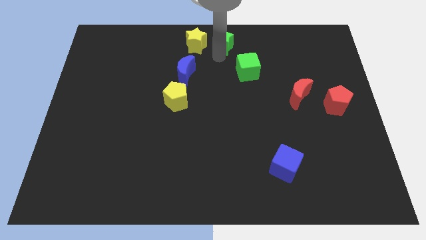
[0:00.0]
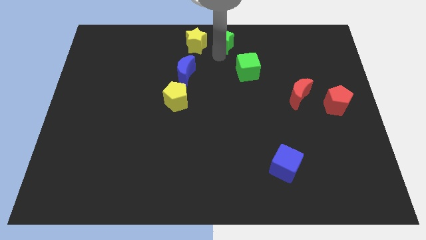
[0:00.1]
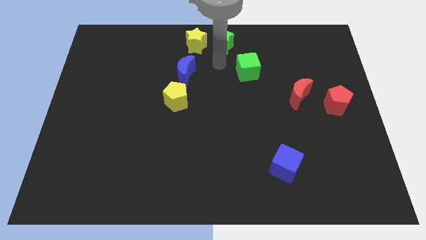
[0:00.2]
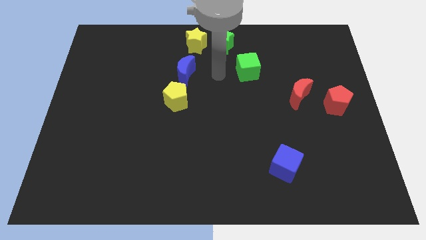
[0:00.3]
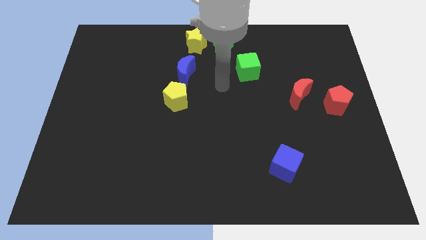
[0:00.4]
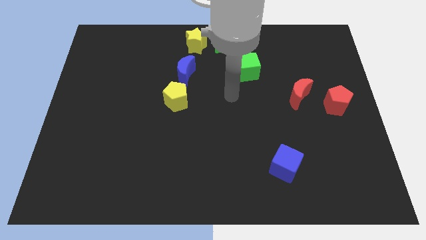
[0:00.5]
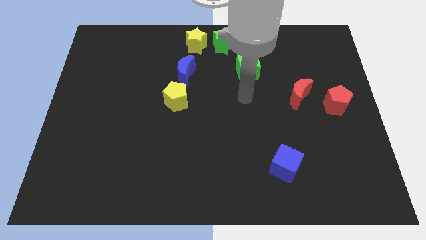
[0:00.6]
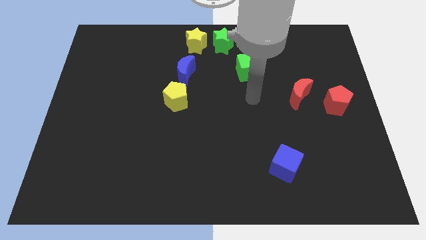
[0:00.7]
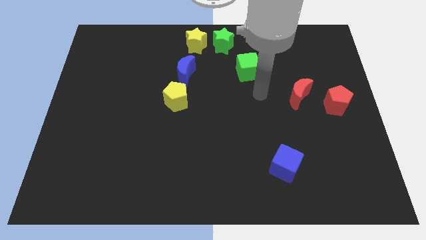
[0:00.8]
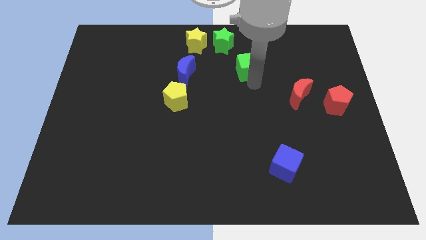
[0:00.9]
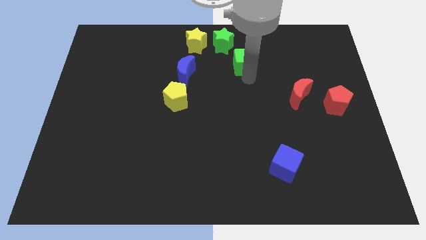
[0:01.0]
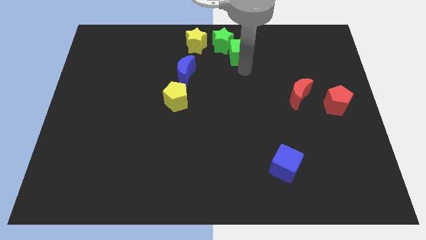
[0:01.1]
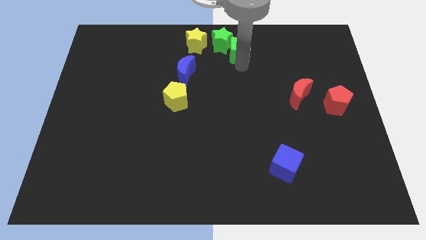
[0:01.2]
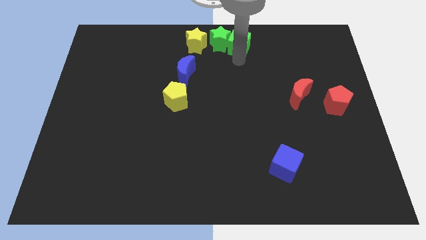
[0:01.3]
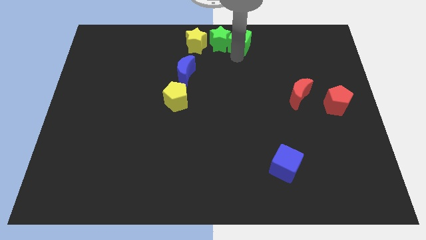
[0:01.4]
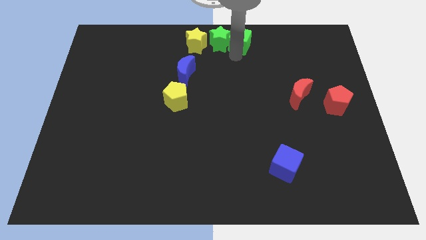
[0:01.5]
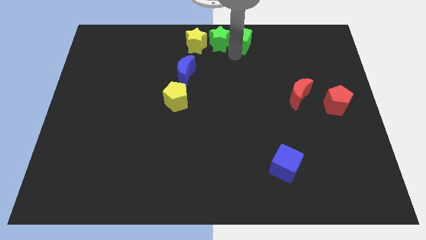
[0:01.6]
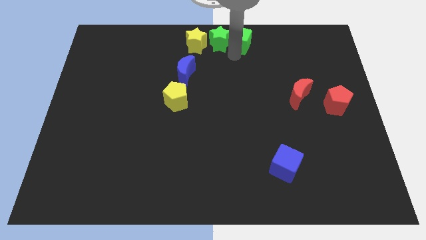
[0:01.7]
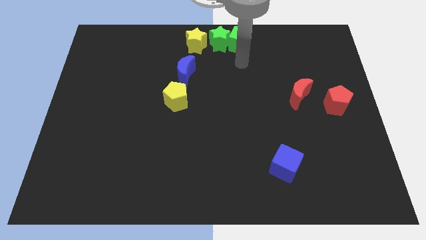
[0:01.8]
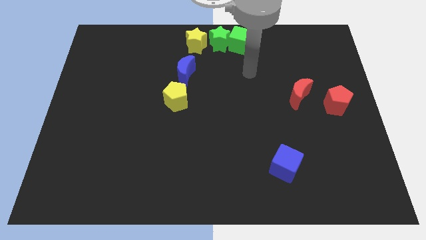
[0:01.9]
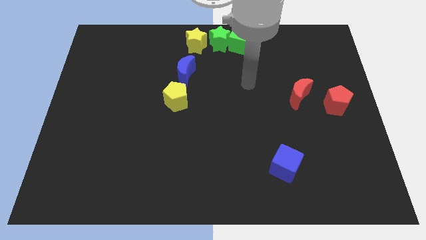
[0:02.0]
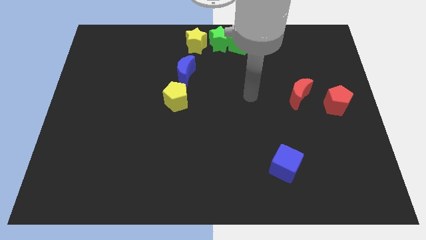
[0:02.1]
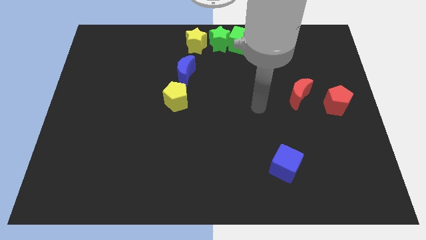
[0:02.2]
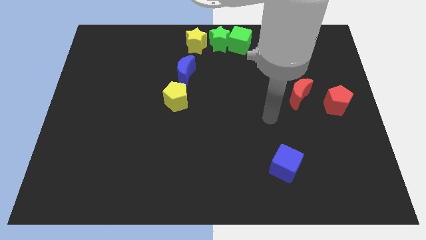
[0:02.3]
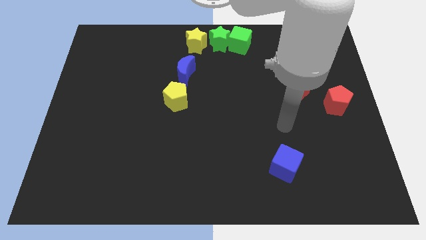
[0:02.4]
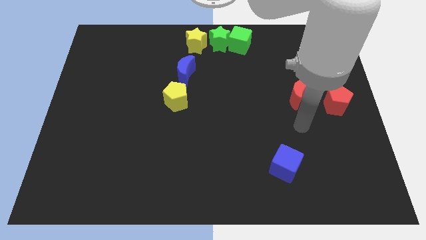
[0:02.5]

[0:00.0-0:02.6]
slide the green cube to the right of the green star

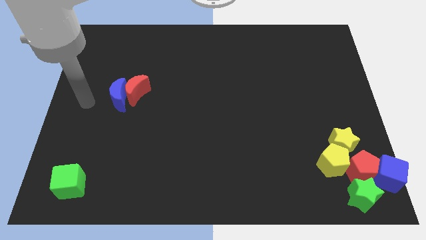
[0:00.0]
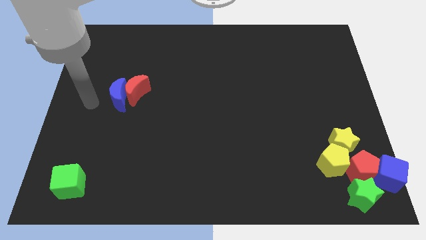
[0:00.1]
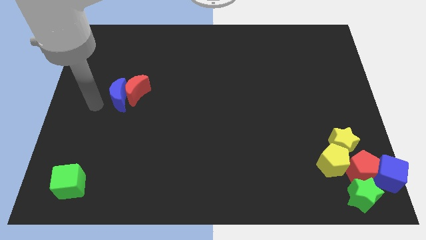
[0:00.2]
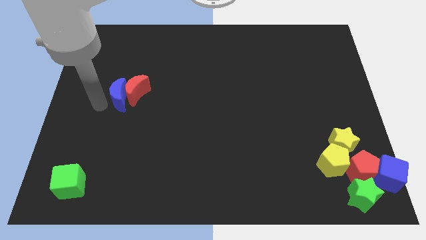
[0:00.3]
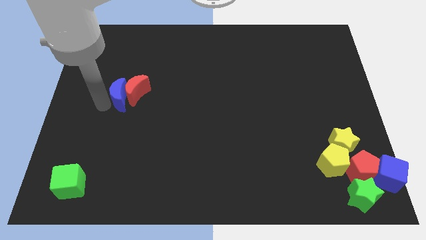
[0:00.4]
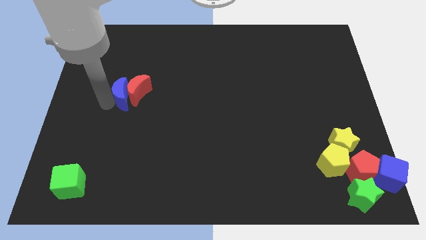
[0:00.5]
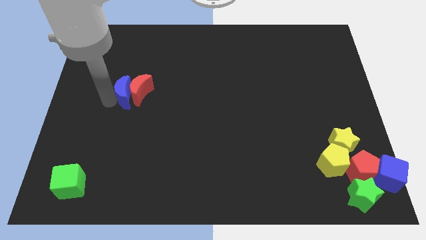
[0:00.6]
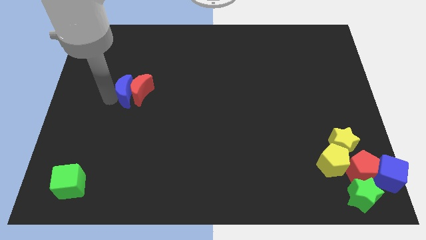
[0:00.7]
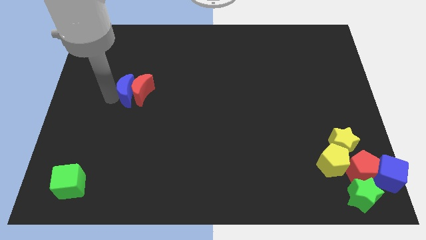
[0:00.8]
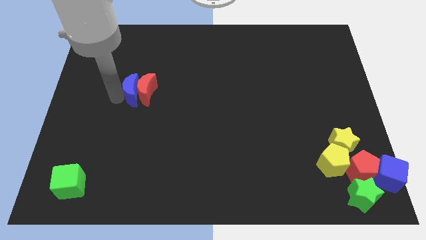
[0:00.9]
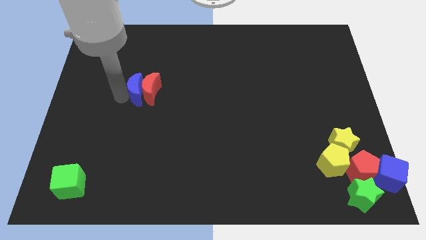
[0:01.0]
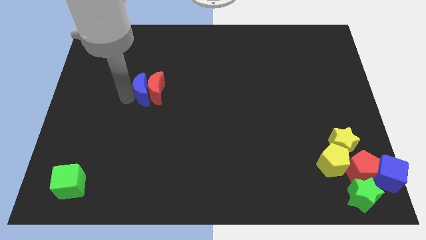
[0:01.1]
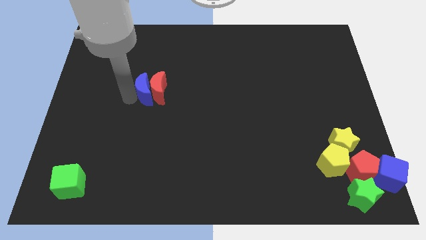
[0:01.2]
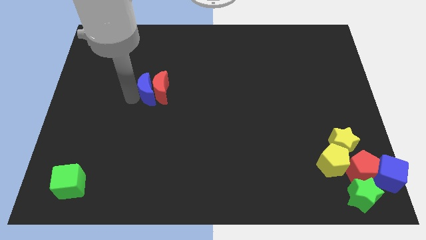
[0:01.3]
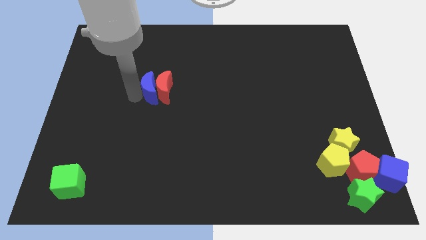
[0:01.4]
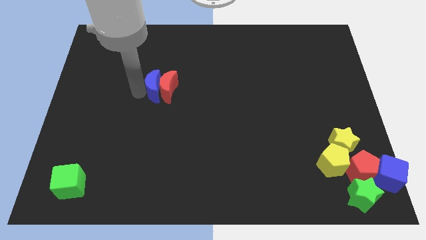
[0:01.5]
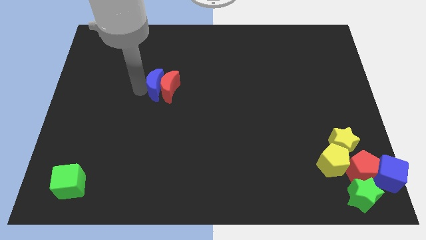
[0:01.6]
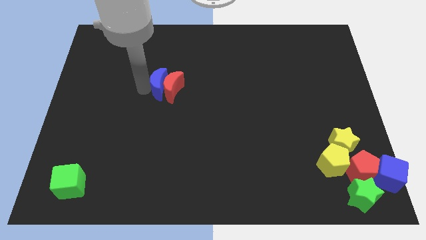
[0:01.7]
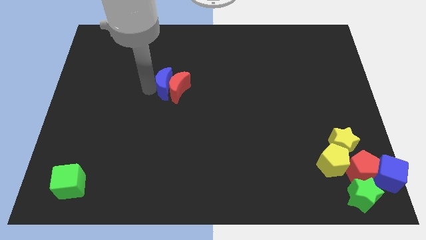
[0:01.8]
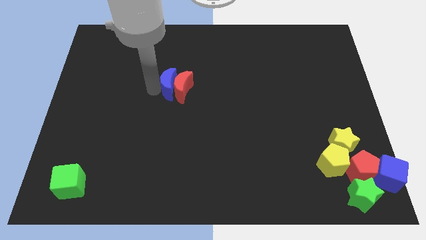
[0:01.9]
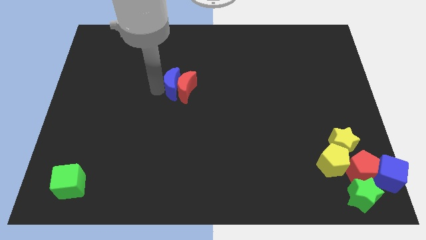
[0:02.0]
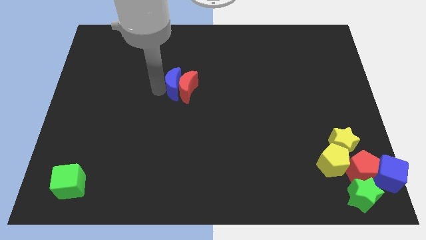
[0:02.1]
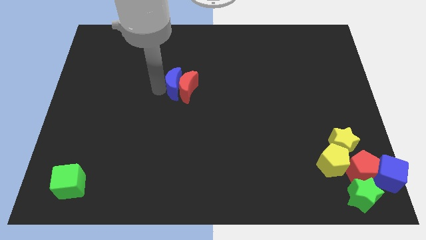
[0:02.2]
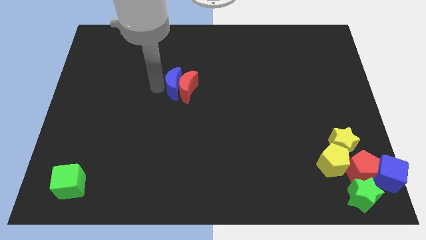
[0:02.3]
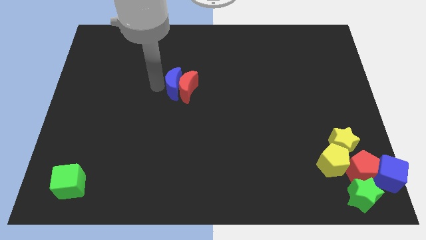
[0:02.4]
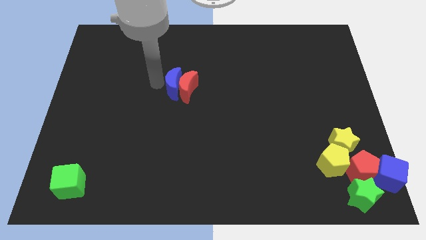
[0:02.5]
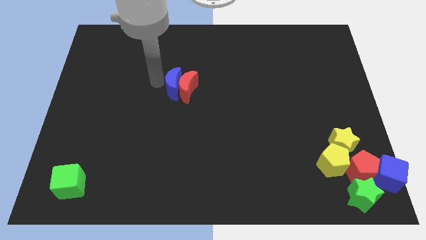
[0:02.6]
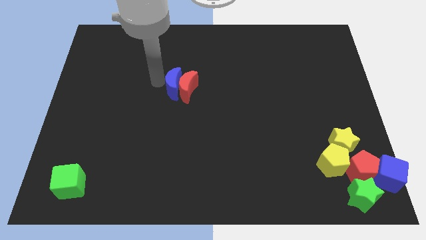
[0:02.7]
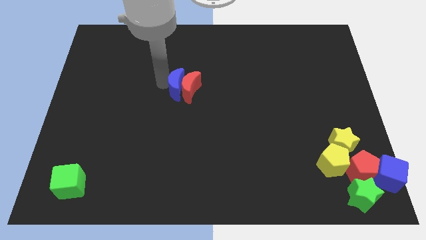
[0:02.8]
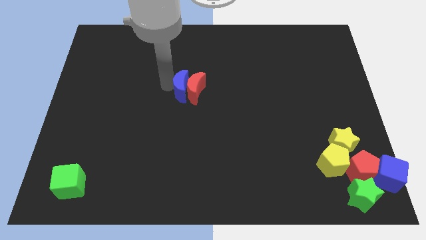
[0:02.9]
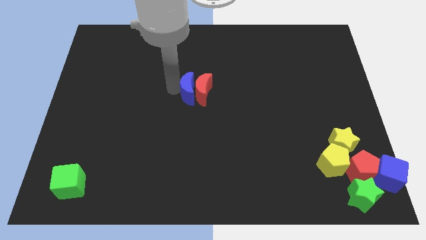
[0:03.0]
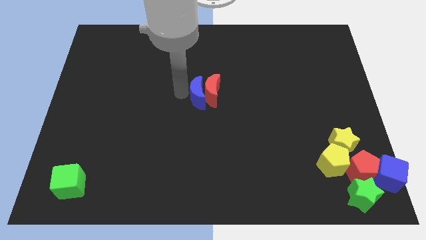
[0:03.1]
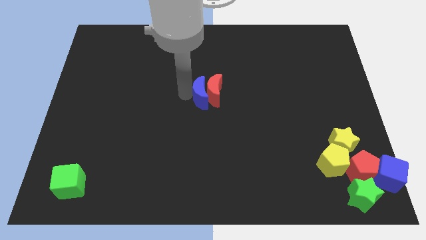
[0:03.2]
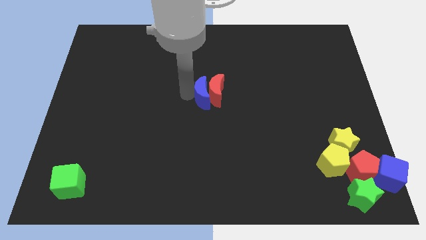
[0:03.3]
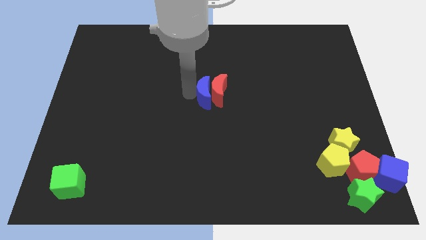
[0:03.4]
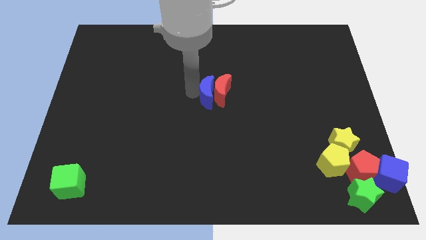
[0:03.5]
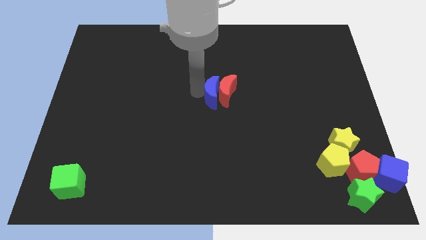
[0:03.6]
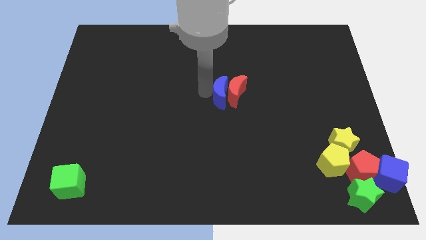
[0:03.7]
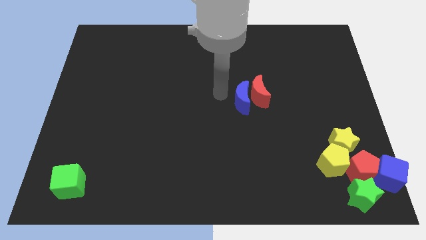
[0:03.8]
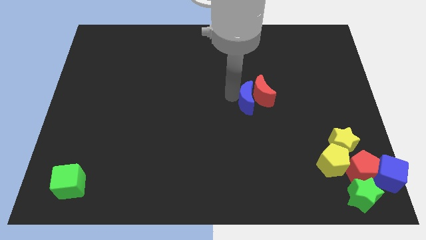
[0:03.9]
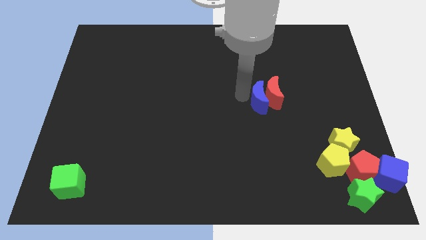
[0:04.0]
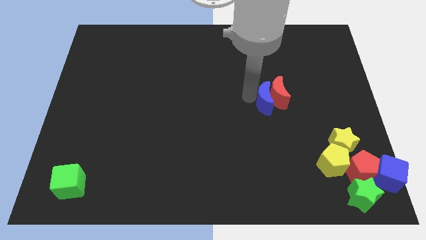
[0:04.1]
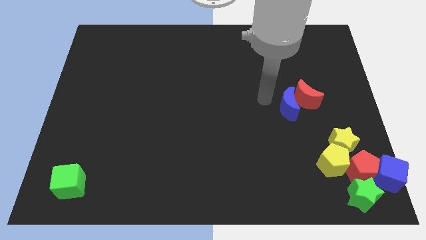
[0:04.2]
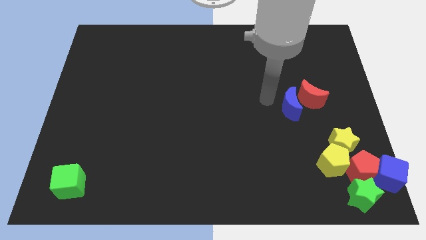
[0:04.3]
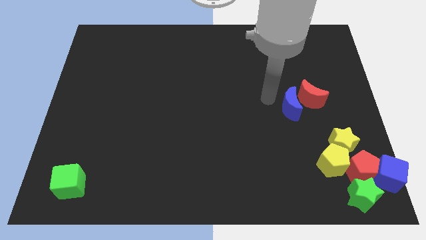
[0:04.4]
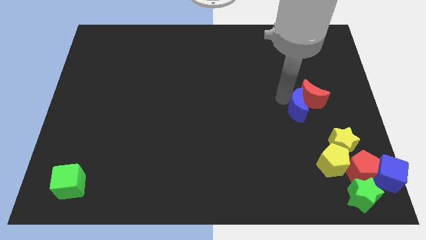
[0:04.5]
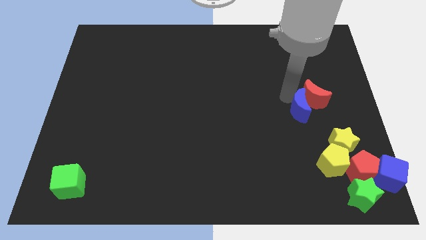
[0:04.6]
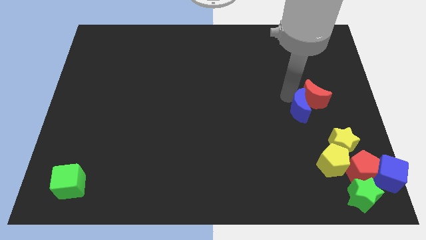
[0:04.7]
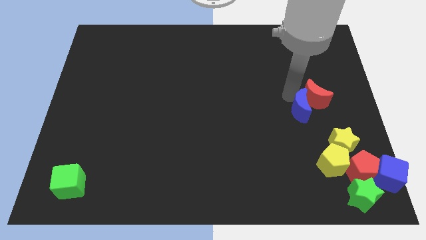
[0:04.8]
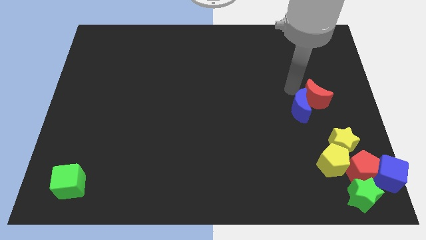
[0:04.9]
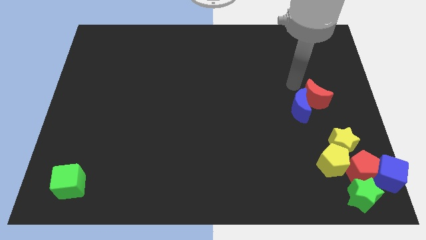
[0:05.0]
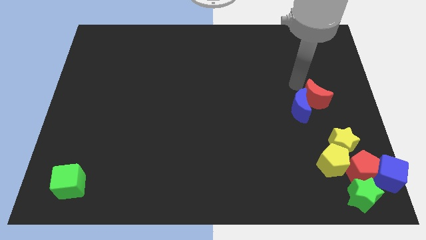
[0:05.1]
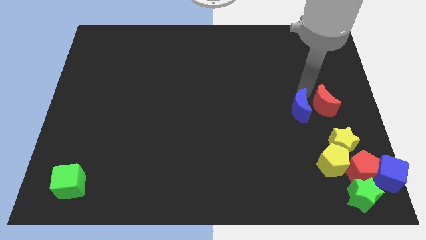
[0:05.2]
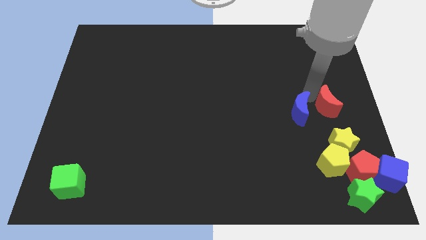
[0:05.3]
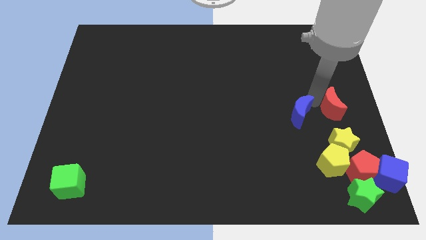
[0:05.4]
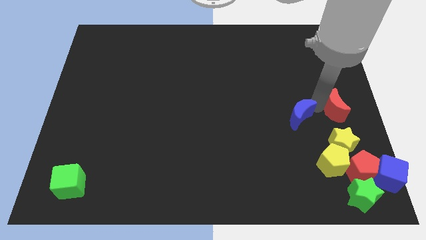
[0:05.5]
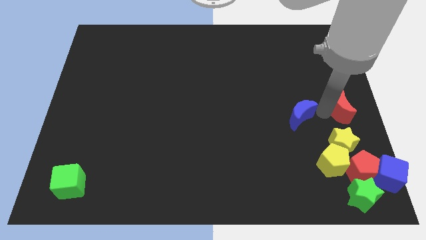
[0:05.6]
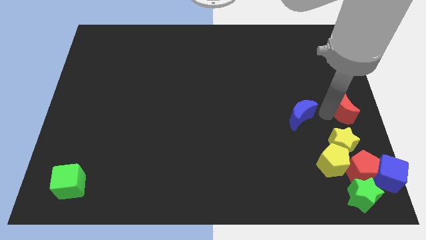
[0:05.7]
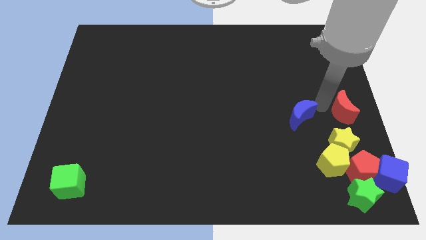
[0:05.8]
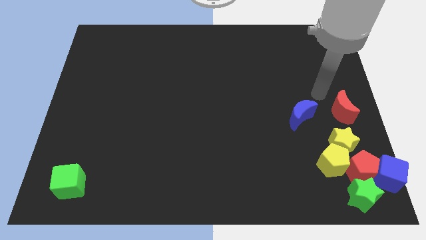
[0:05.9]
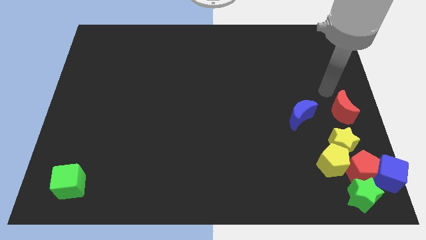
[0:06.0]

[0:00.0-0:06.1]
push the red moon to the center right with the blue moon

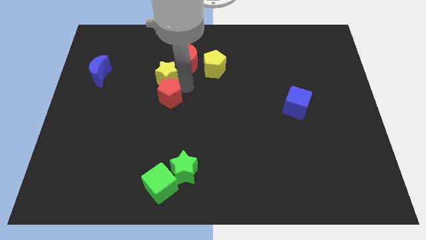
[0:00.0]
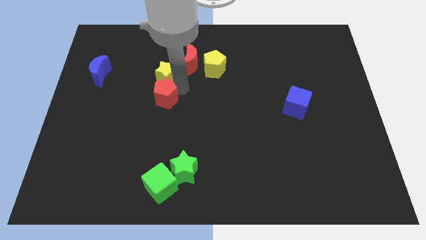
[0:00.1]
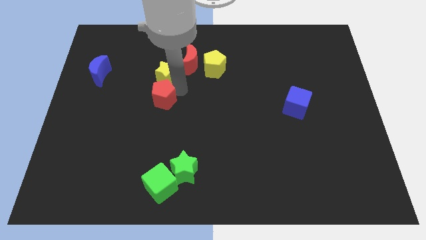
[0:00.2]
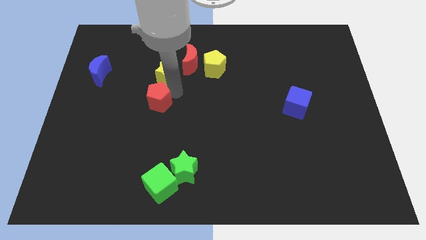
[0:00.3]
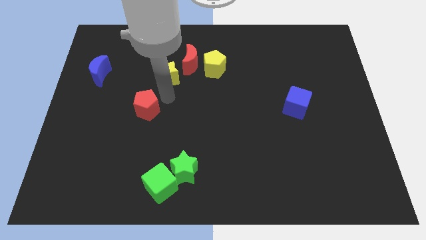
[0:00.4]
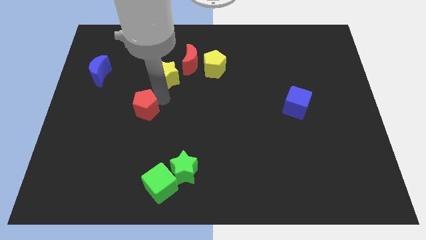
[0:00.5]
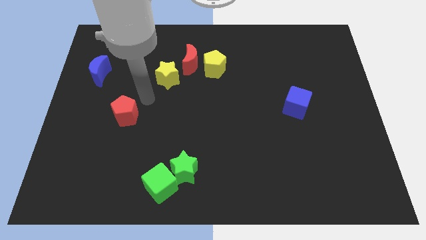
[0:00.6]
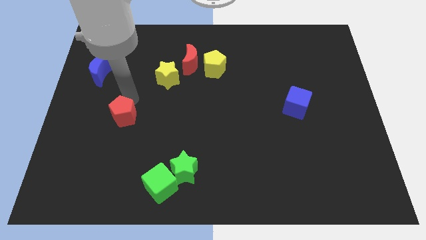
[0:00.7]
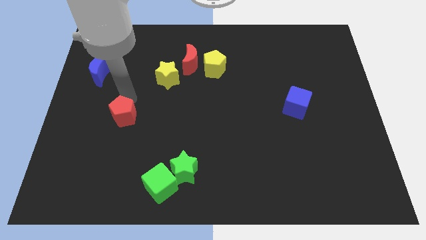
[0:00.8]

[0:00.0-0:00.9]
separate the red pentagon from the yellow star
